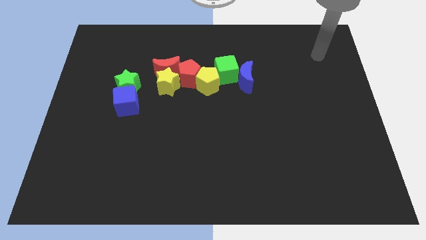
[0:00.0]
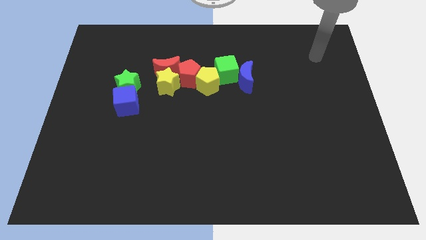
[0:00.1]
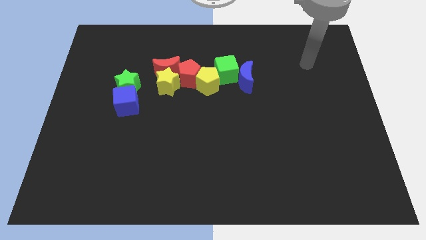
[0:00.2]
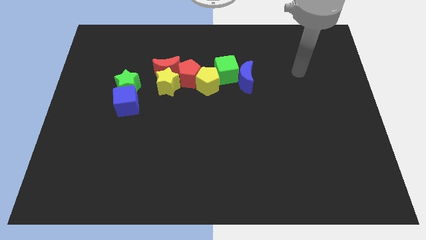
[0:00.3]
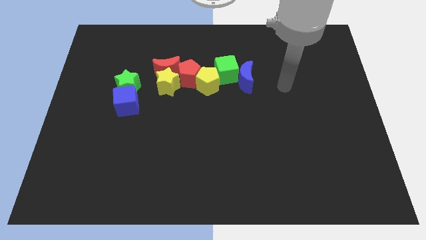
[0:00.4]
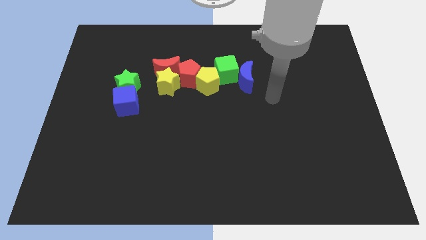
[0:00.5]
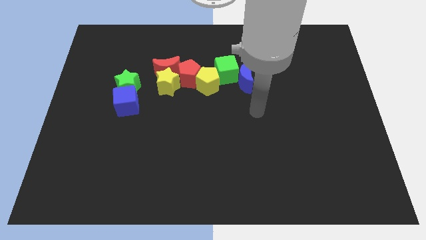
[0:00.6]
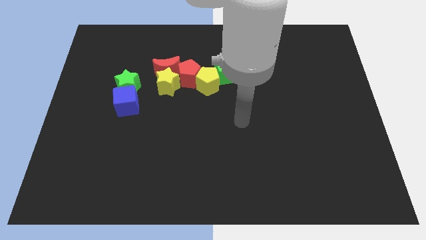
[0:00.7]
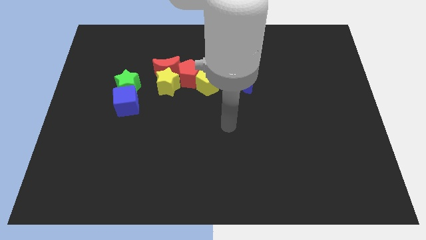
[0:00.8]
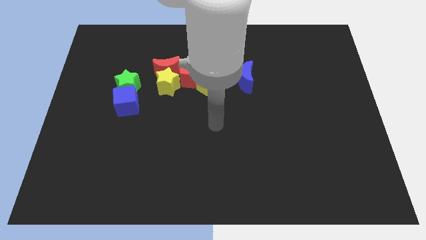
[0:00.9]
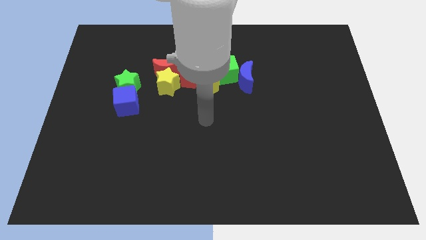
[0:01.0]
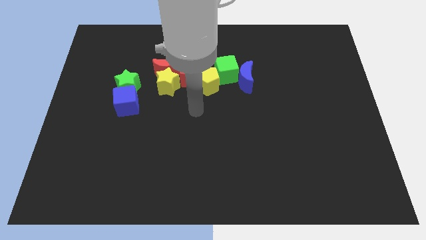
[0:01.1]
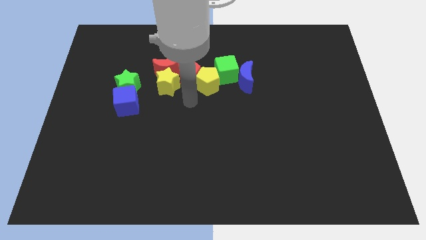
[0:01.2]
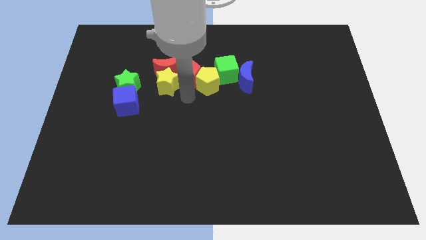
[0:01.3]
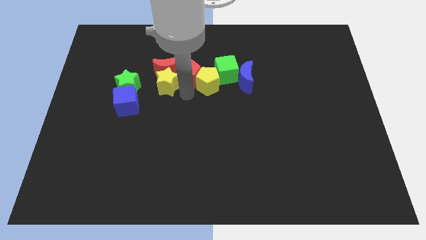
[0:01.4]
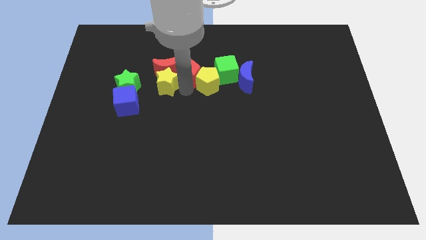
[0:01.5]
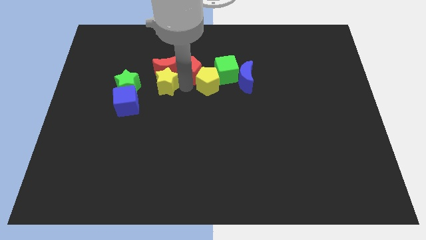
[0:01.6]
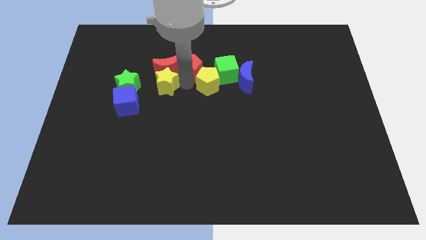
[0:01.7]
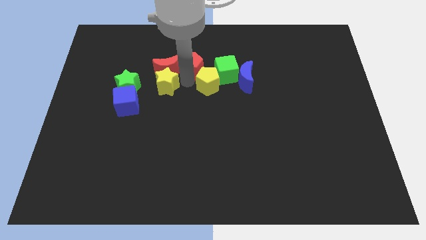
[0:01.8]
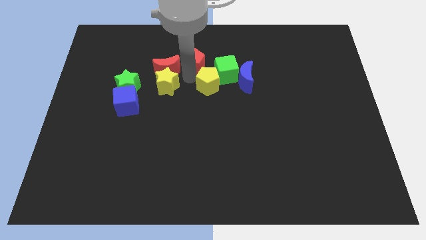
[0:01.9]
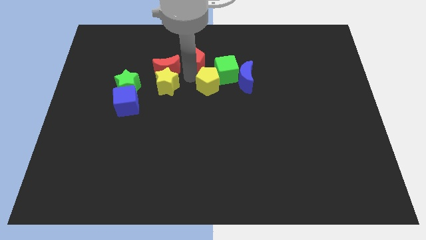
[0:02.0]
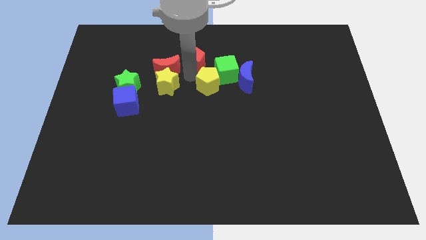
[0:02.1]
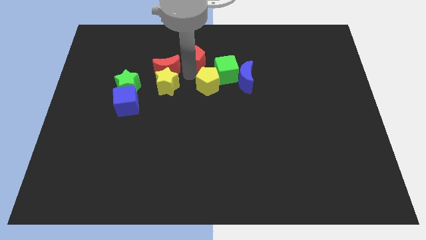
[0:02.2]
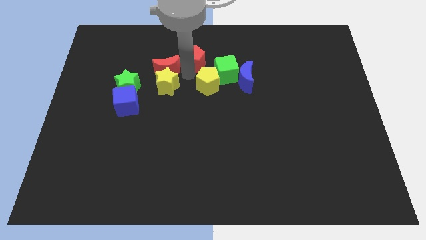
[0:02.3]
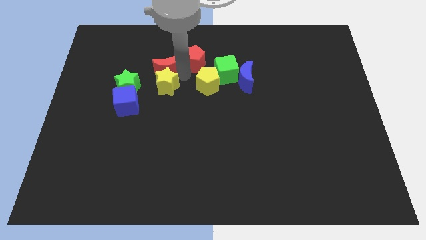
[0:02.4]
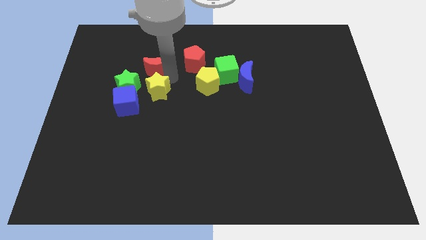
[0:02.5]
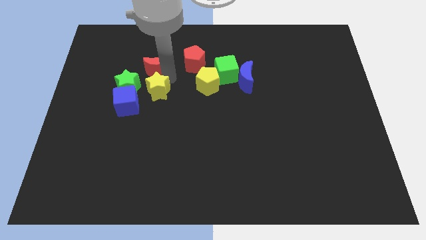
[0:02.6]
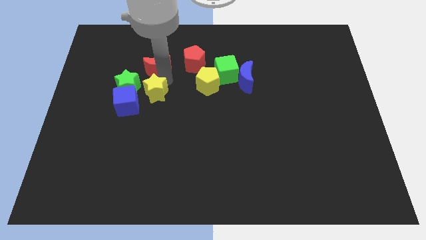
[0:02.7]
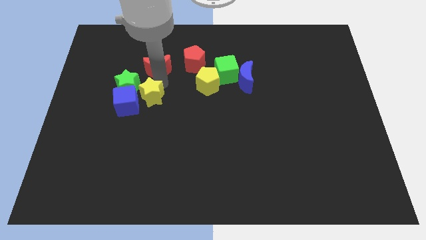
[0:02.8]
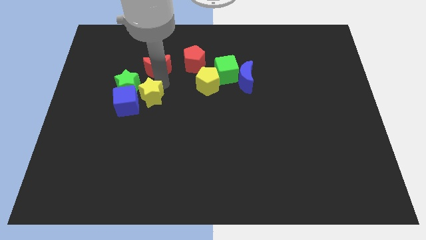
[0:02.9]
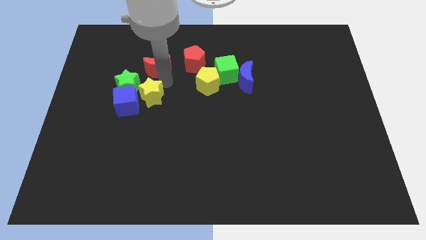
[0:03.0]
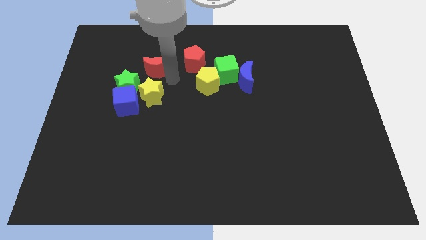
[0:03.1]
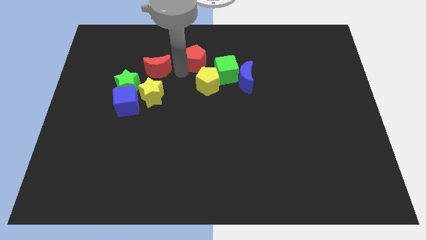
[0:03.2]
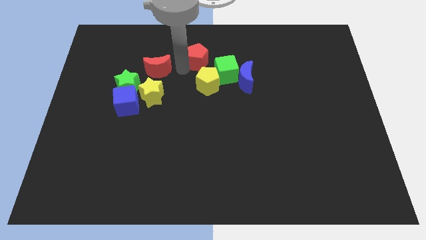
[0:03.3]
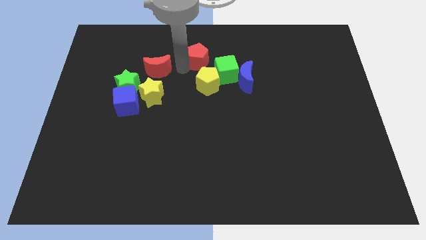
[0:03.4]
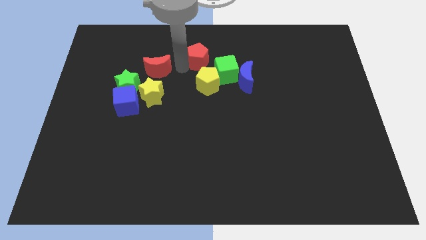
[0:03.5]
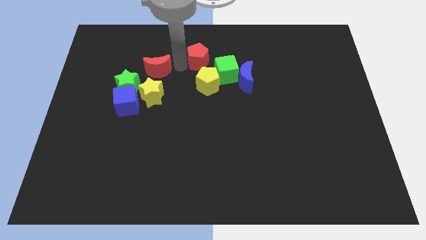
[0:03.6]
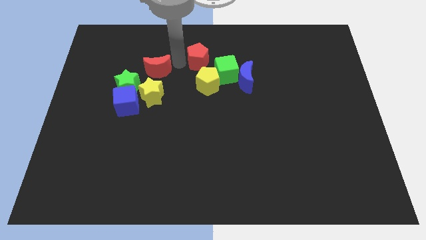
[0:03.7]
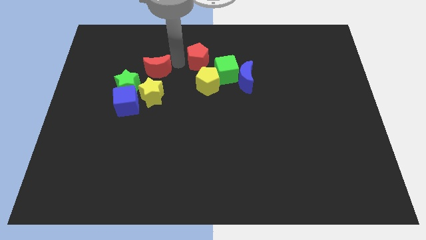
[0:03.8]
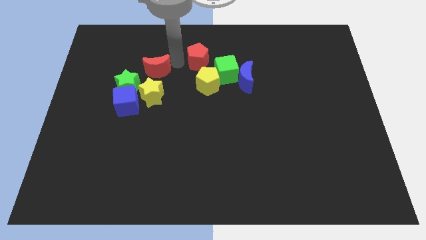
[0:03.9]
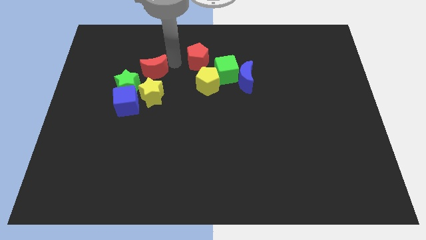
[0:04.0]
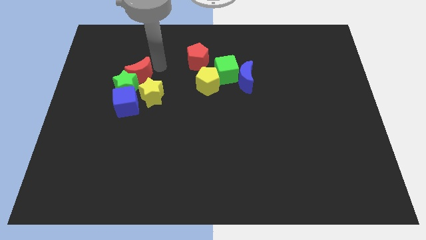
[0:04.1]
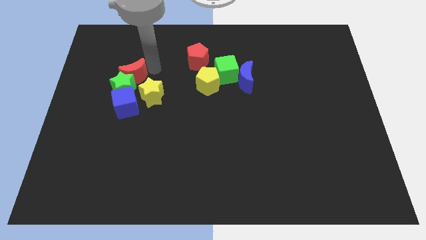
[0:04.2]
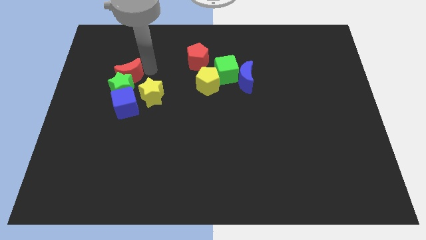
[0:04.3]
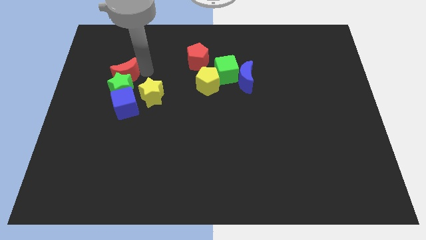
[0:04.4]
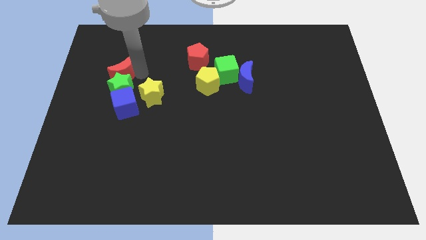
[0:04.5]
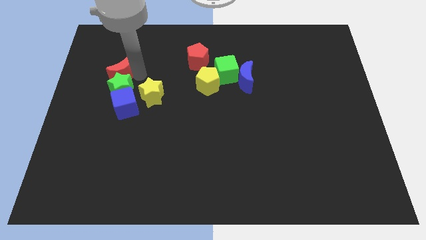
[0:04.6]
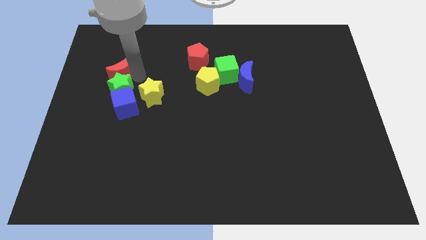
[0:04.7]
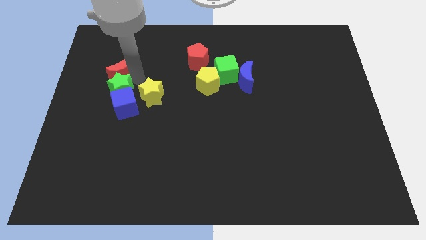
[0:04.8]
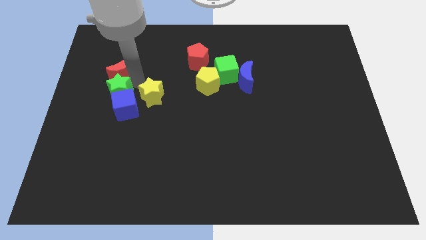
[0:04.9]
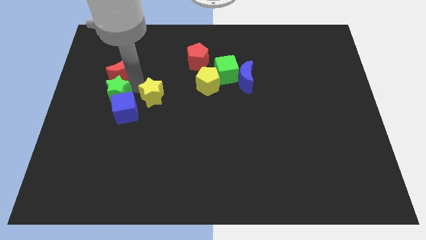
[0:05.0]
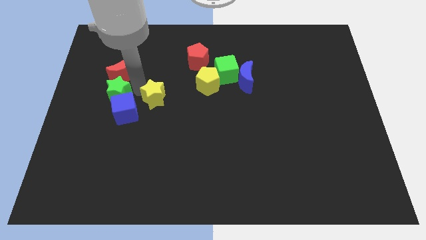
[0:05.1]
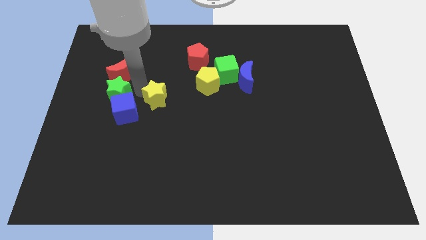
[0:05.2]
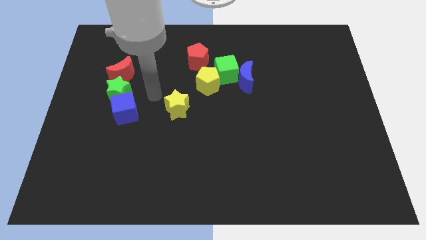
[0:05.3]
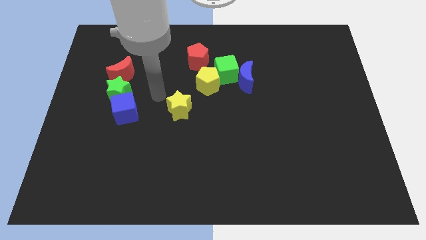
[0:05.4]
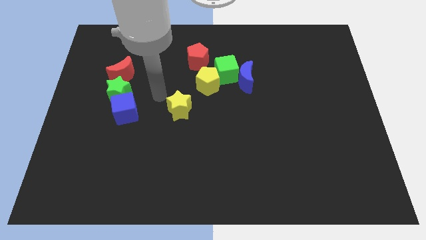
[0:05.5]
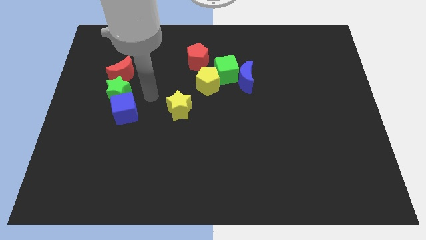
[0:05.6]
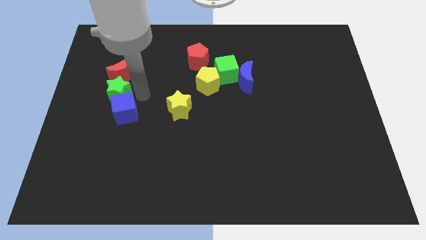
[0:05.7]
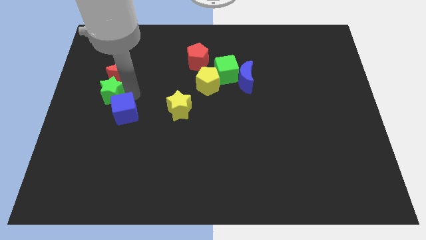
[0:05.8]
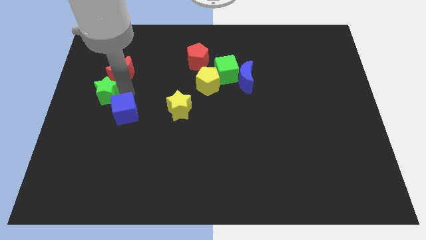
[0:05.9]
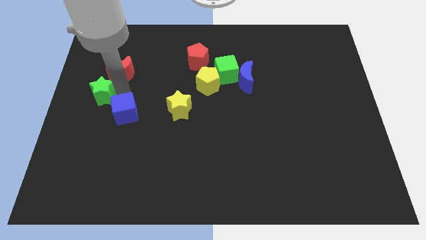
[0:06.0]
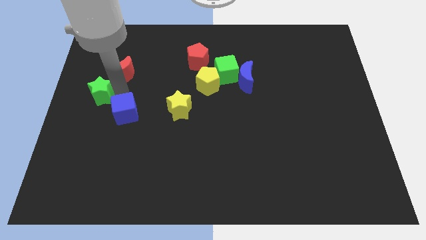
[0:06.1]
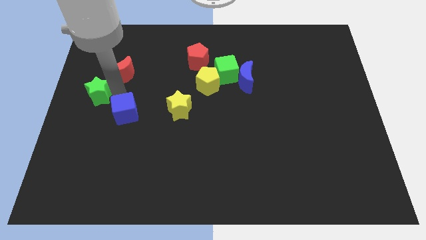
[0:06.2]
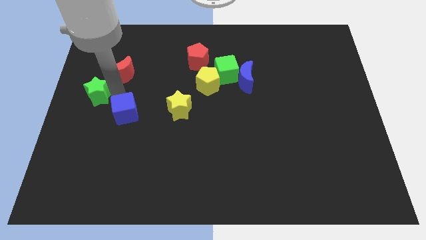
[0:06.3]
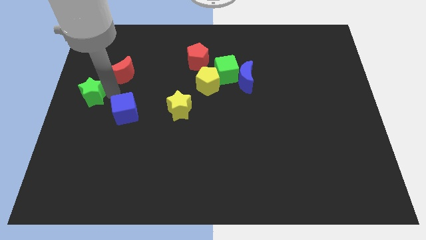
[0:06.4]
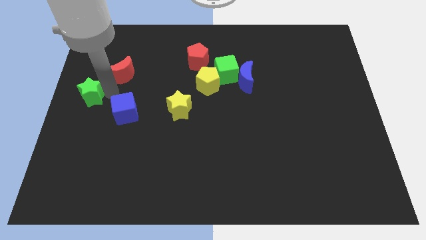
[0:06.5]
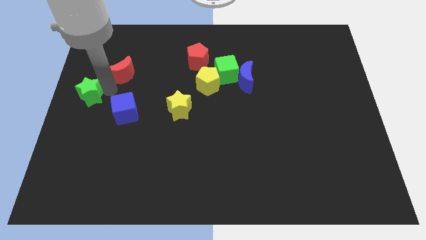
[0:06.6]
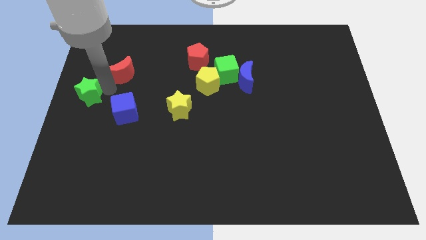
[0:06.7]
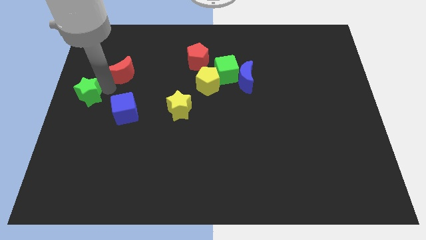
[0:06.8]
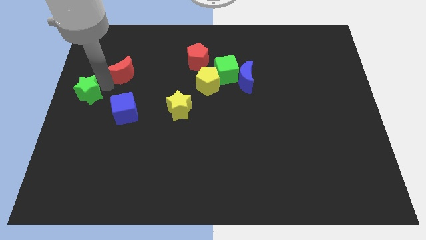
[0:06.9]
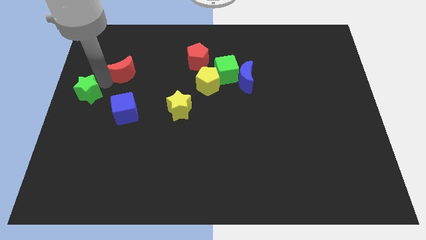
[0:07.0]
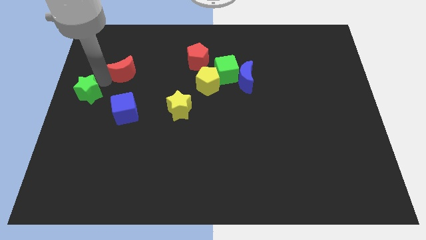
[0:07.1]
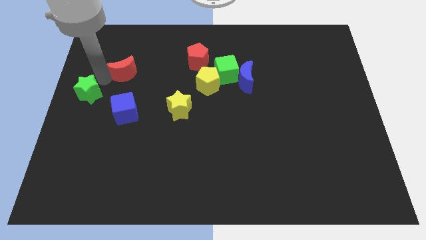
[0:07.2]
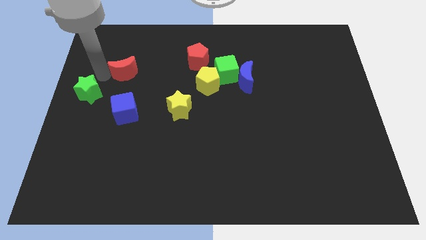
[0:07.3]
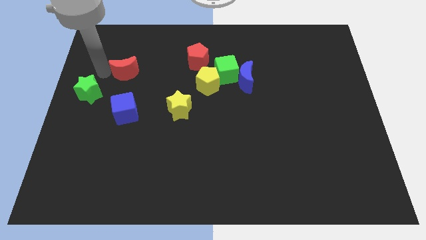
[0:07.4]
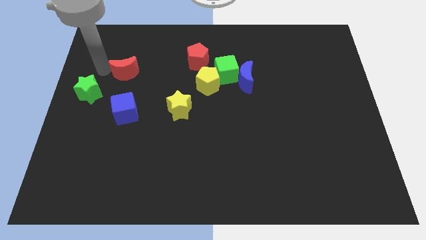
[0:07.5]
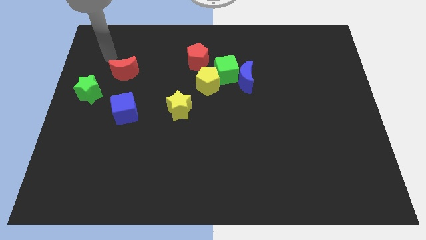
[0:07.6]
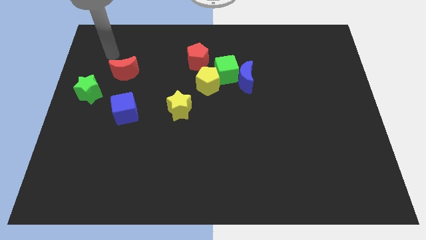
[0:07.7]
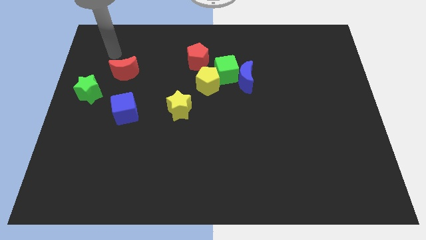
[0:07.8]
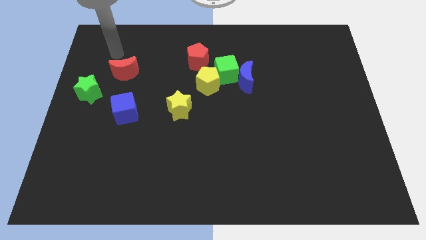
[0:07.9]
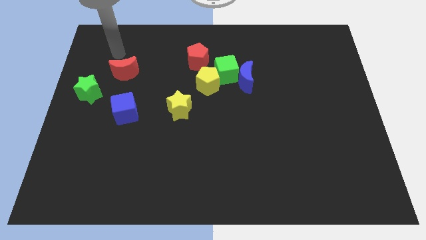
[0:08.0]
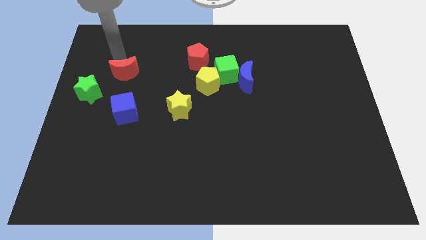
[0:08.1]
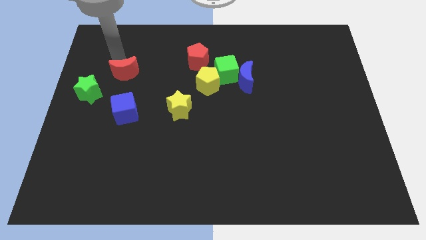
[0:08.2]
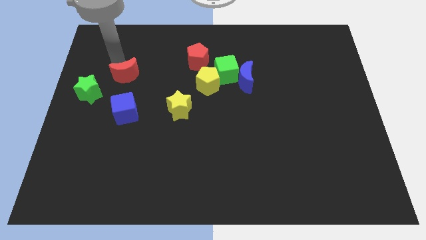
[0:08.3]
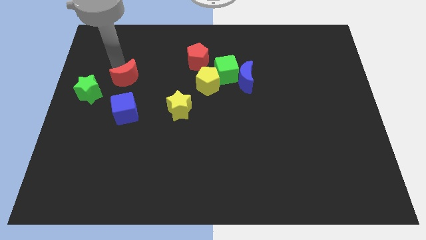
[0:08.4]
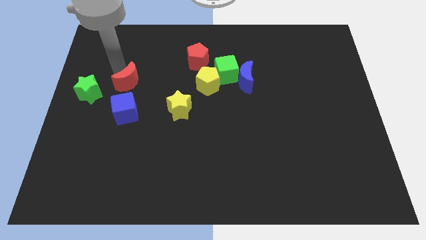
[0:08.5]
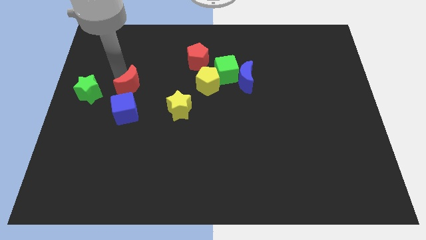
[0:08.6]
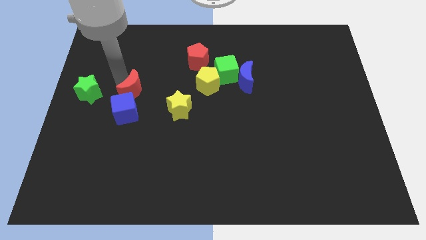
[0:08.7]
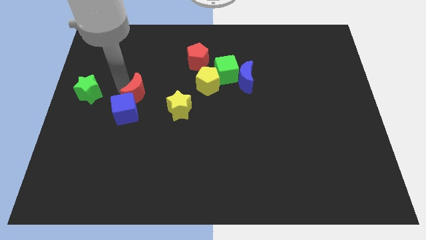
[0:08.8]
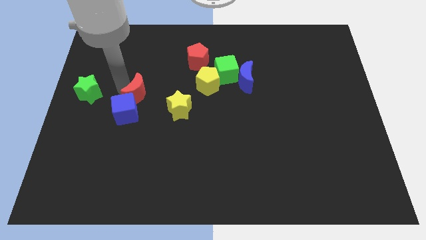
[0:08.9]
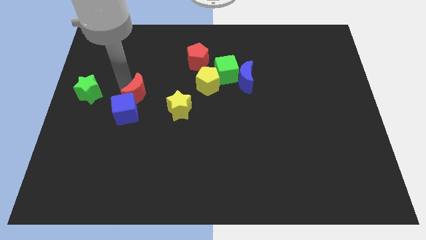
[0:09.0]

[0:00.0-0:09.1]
push the red moon to the blue cube
